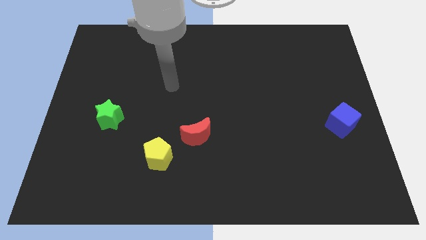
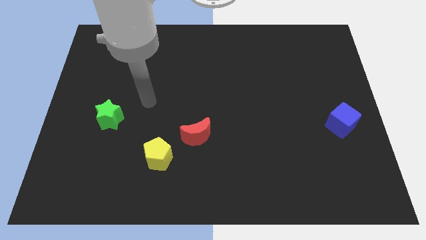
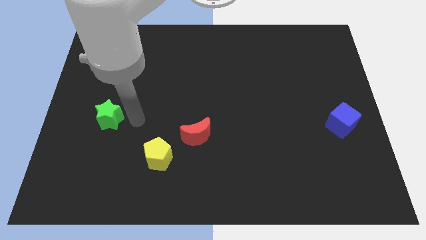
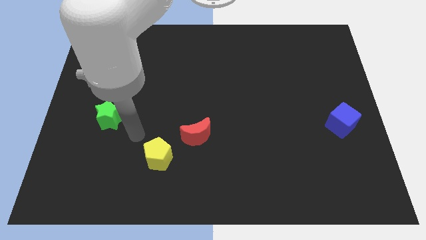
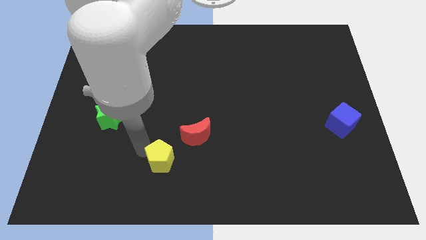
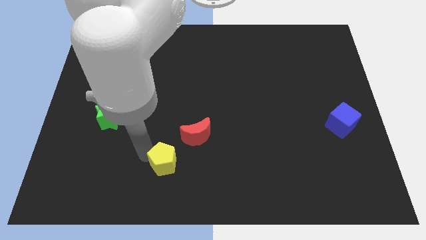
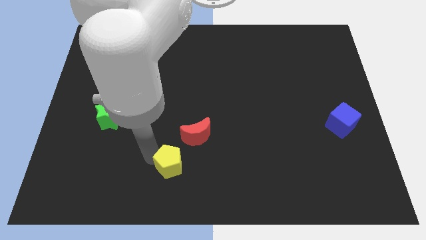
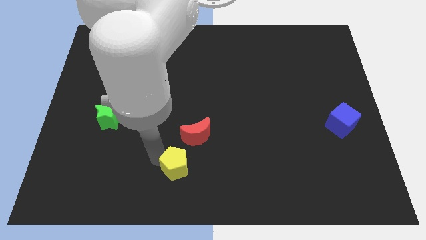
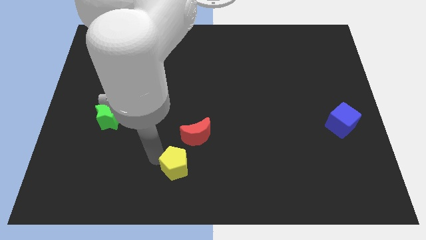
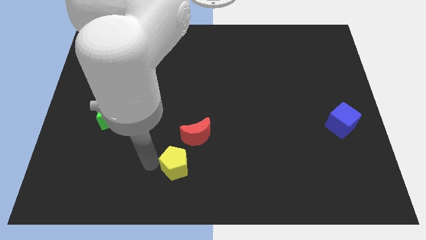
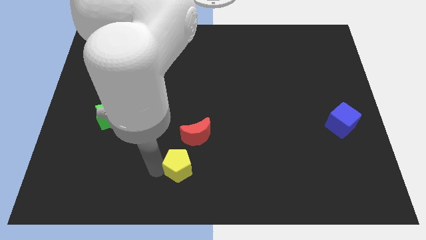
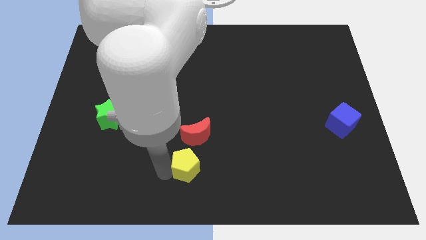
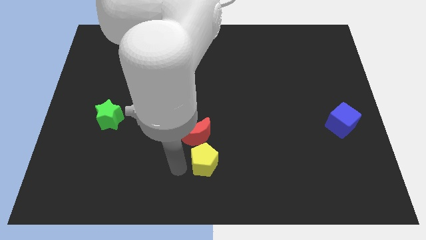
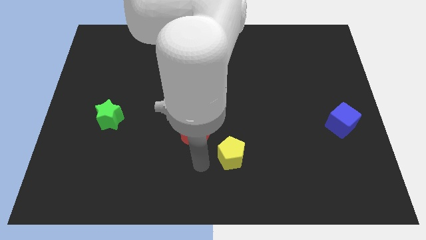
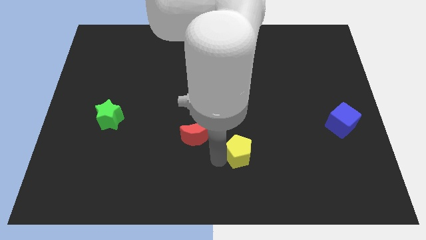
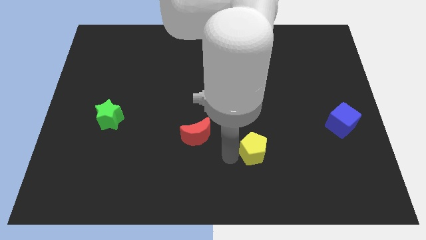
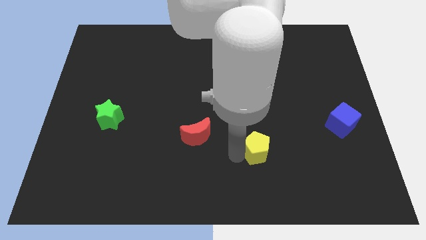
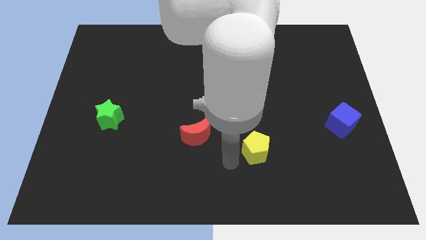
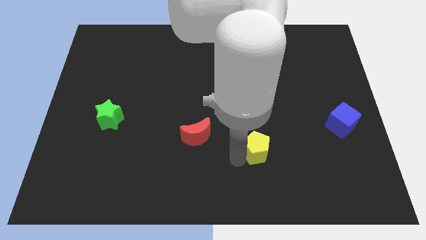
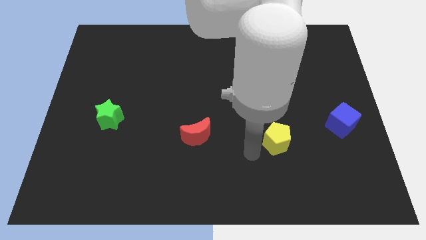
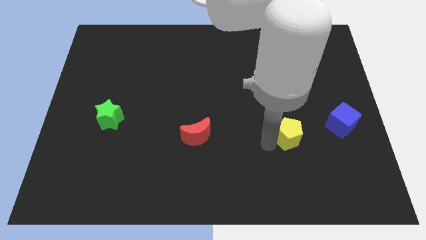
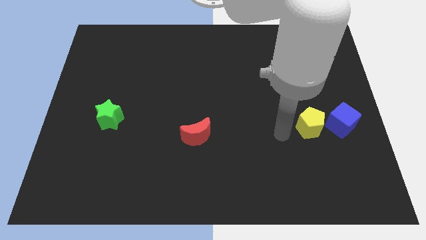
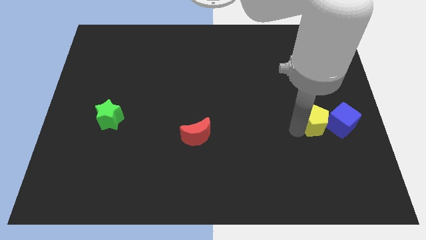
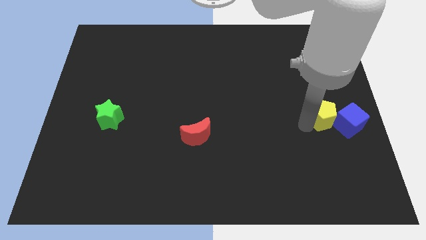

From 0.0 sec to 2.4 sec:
move the yellow block next to the cube

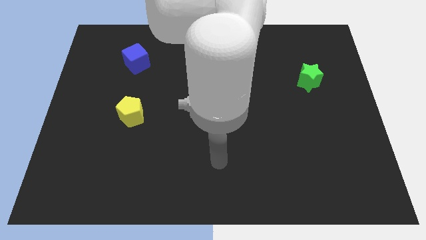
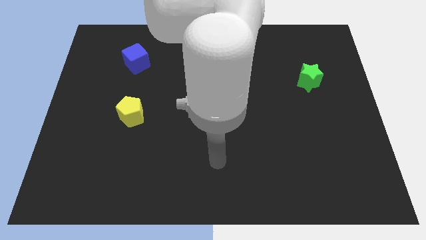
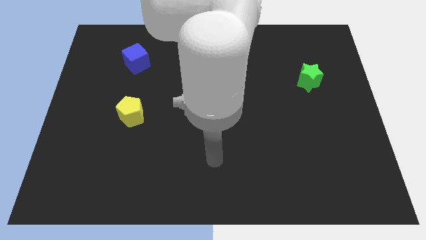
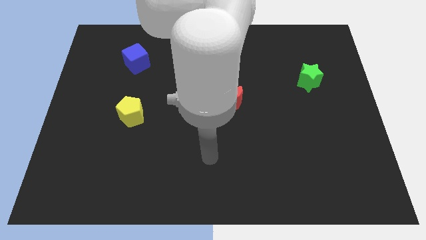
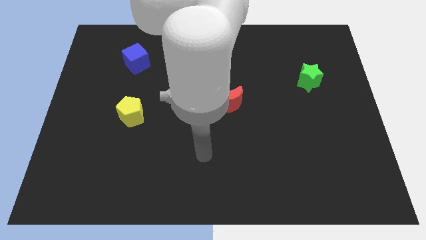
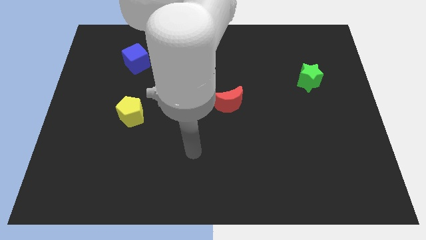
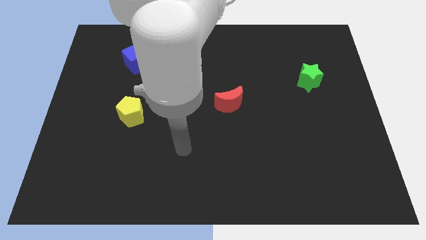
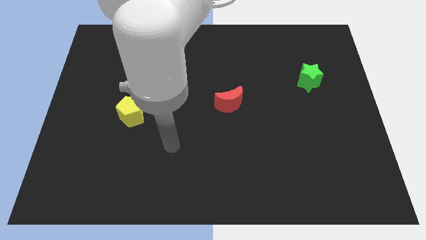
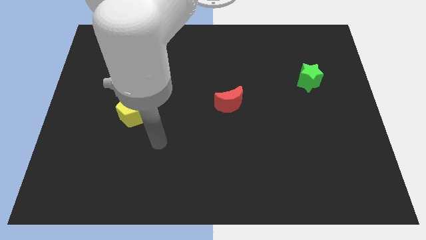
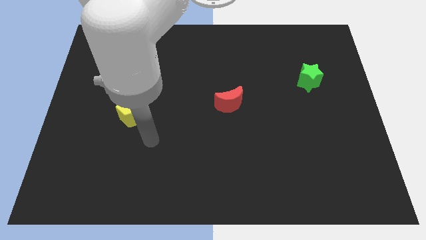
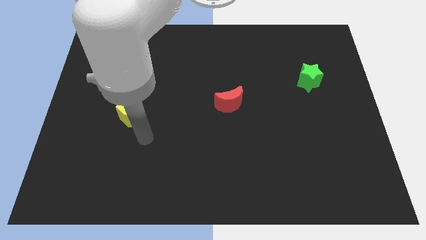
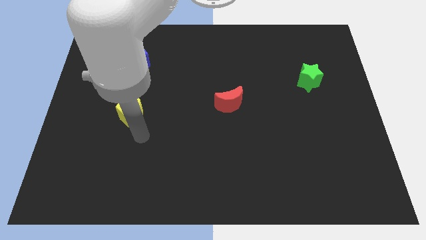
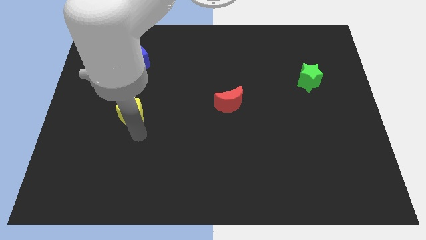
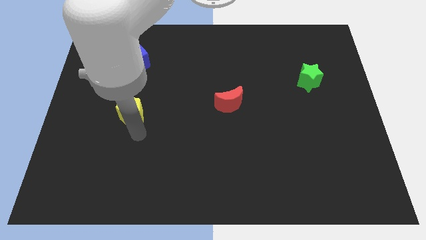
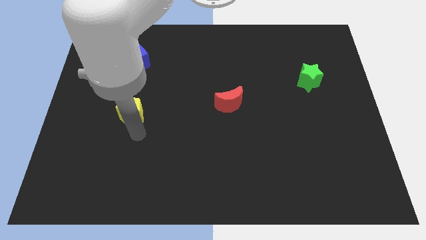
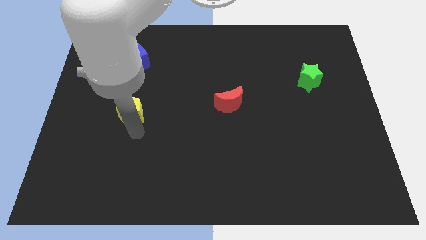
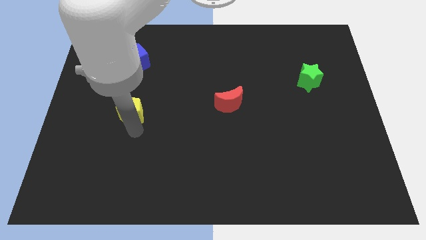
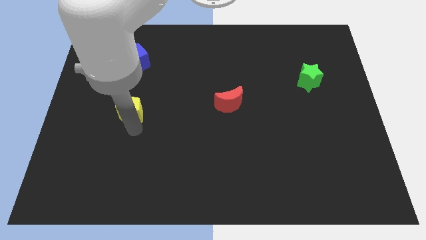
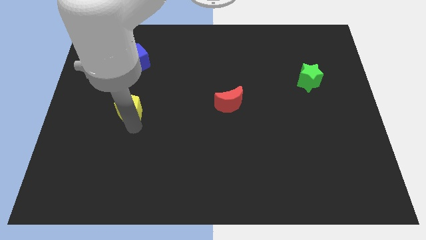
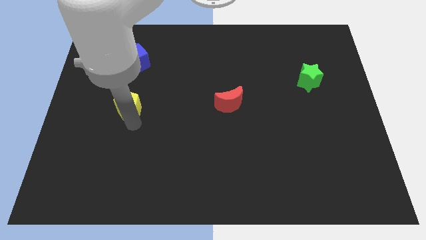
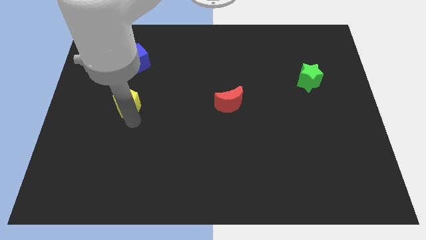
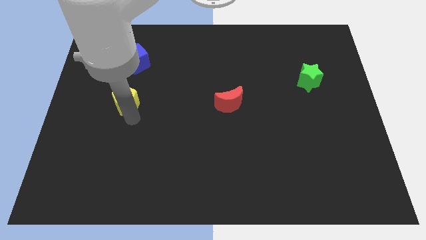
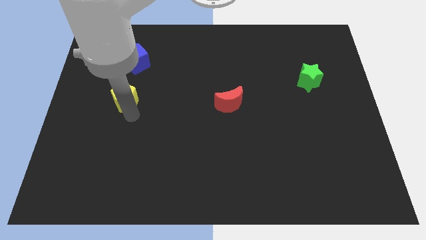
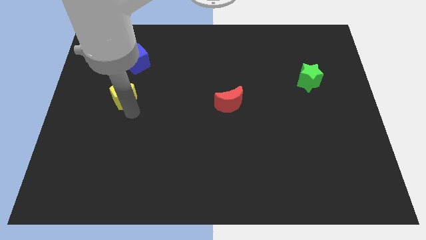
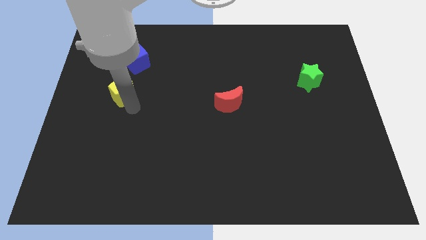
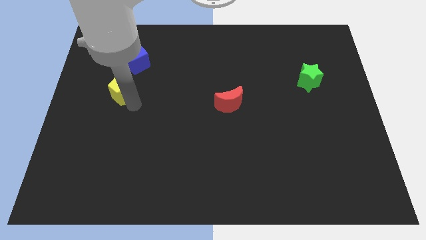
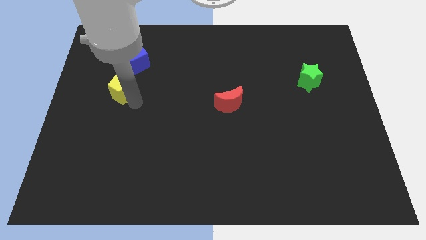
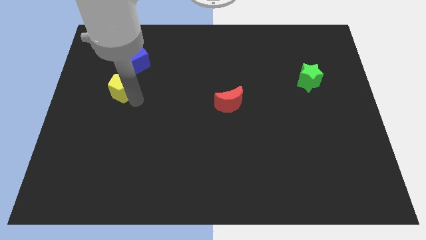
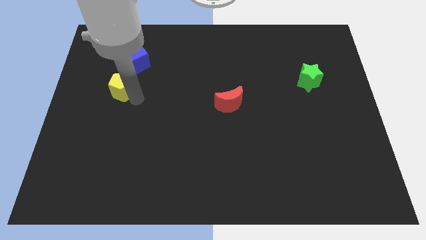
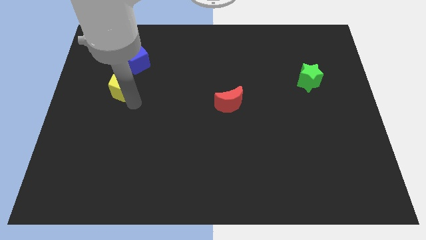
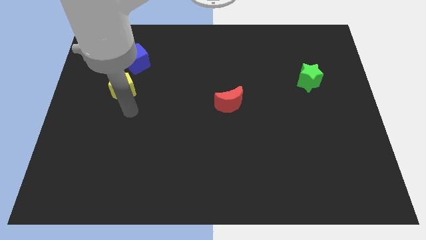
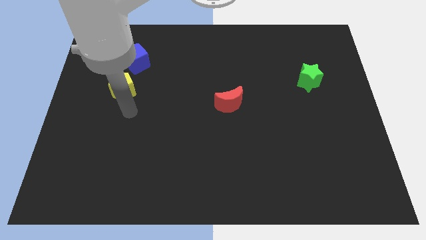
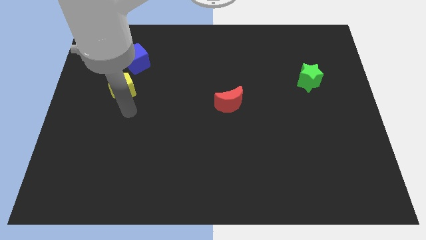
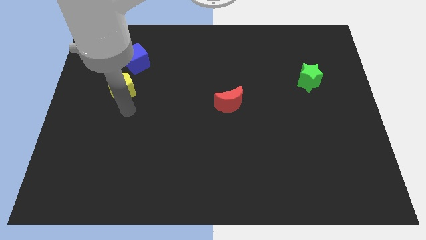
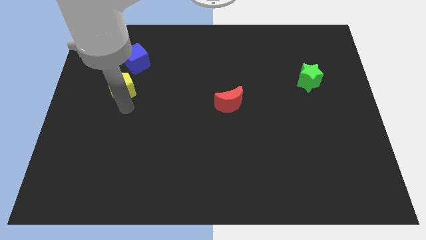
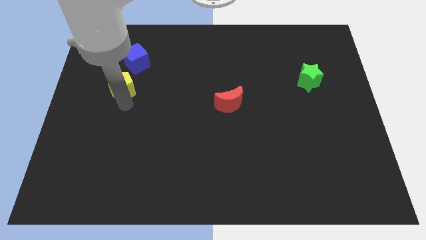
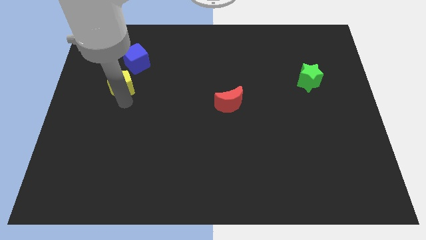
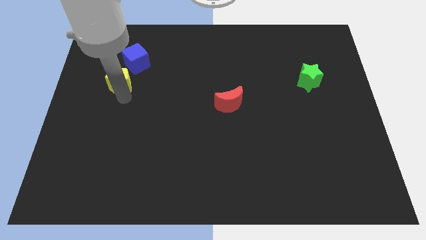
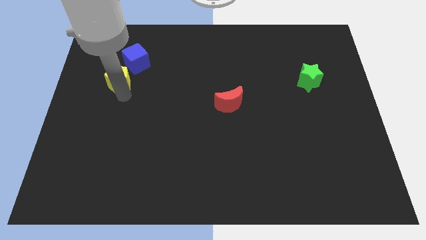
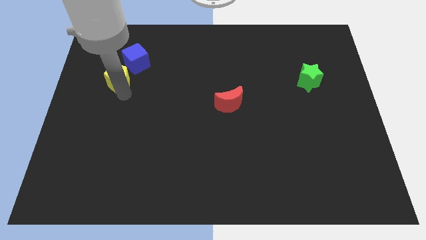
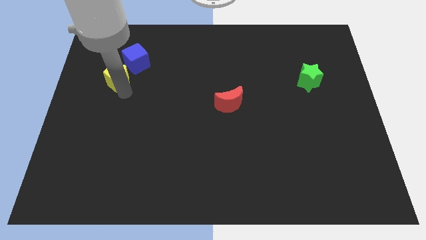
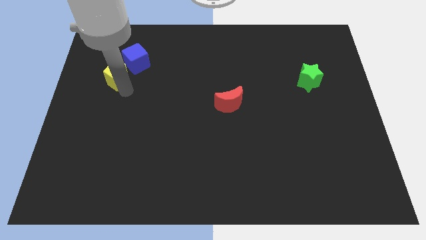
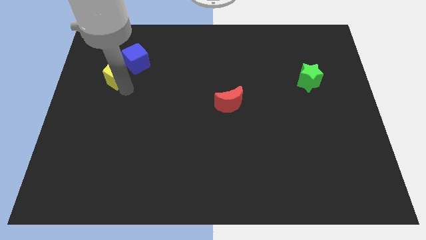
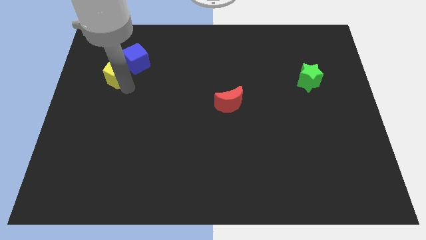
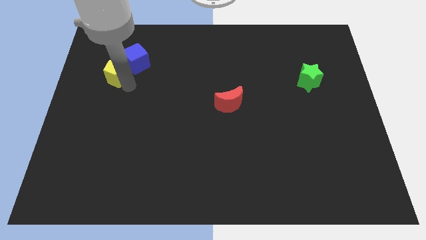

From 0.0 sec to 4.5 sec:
move the pentagon next to the cube

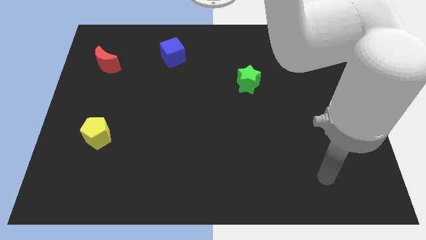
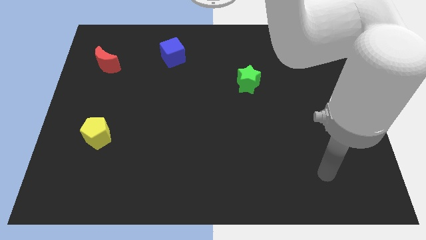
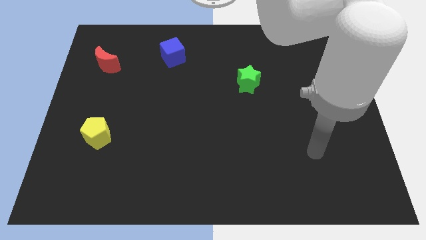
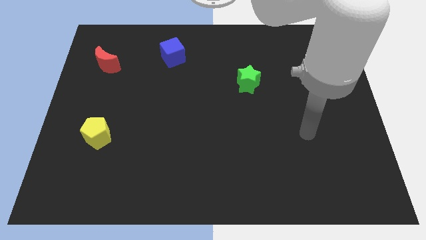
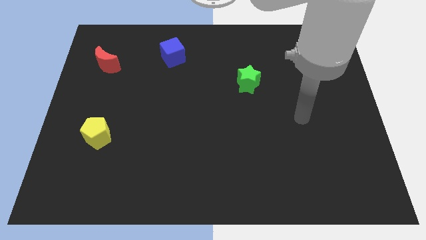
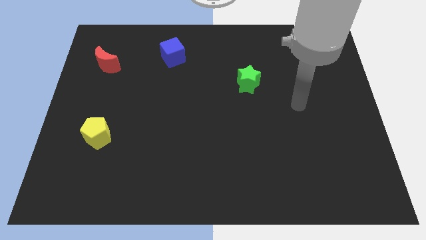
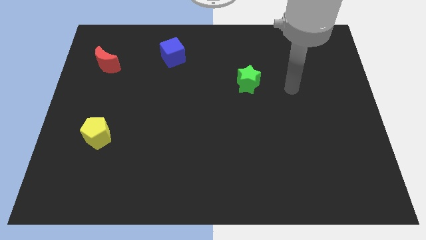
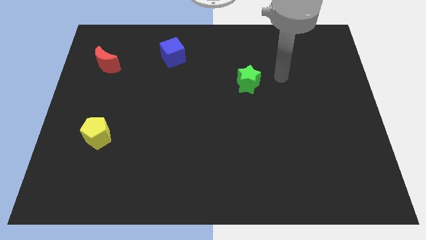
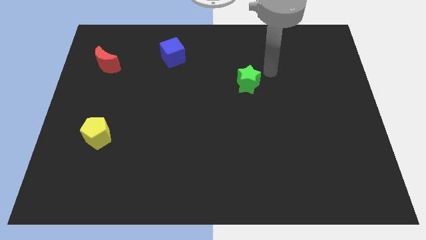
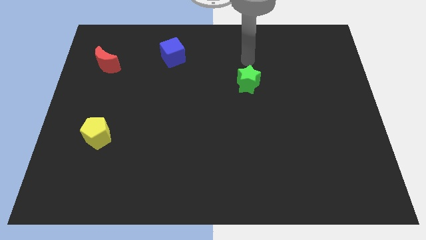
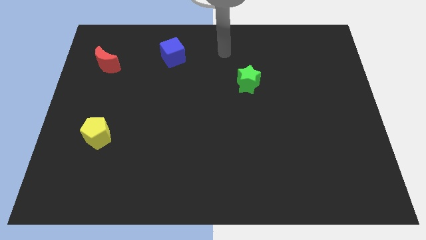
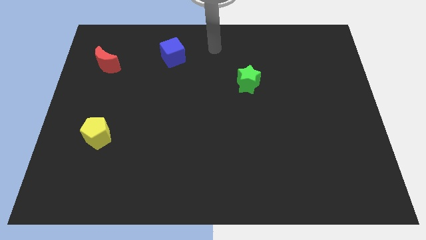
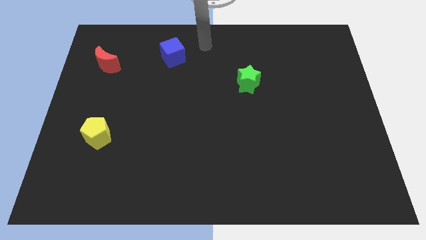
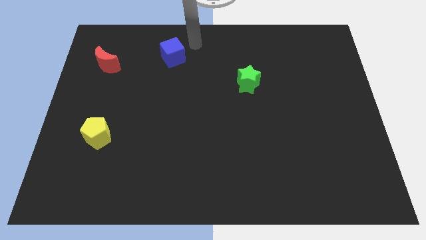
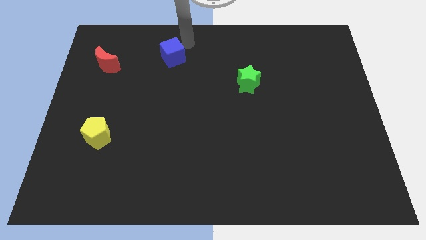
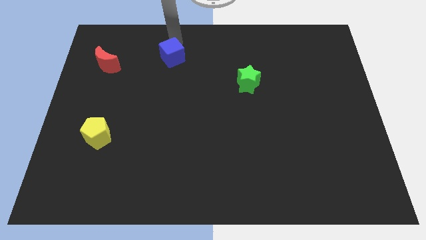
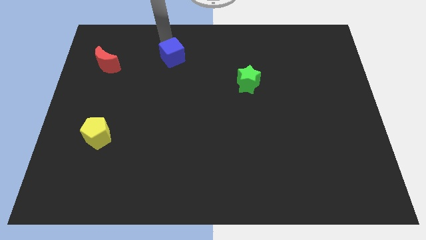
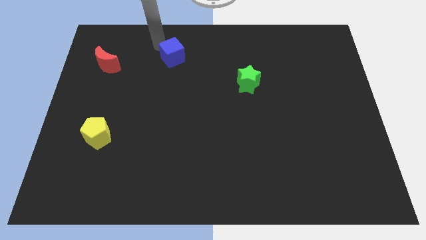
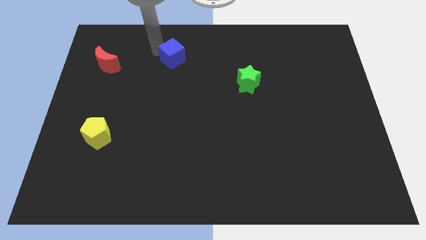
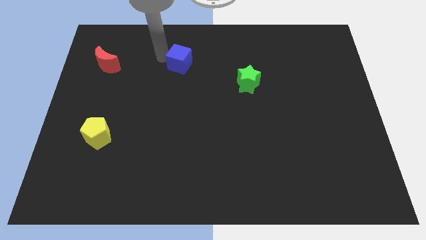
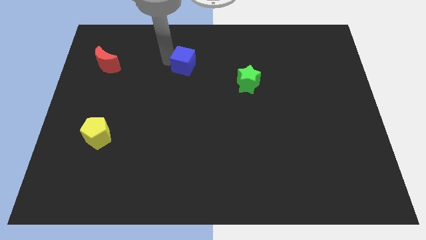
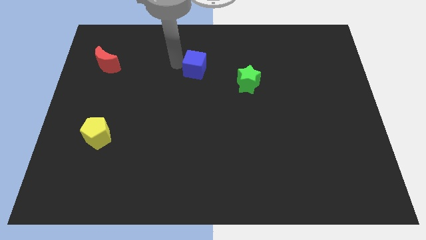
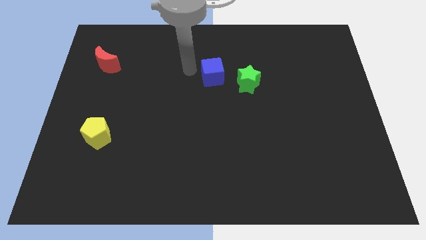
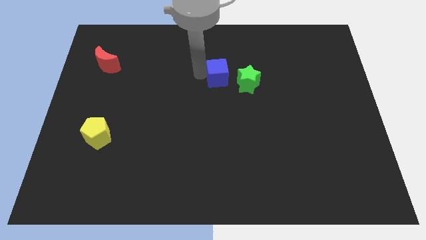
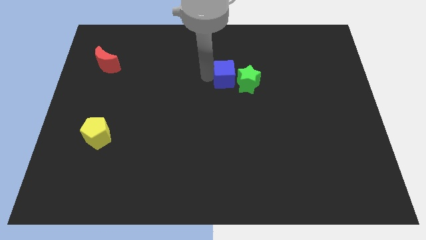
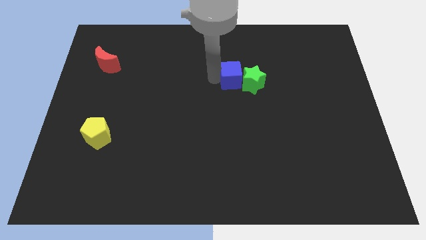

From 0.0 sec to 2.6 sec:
put the blue block to the green star
